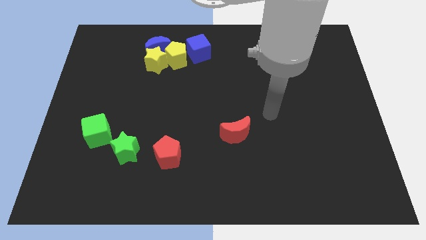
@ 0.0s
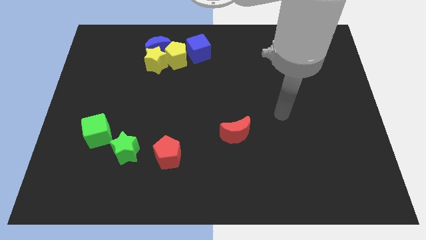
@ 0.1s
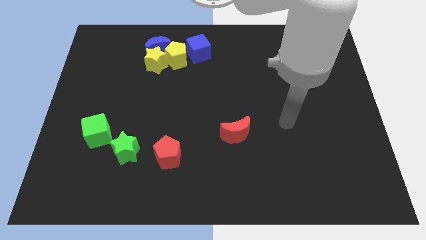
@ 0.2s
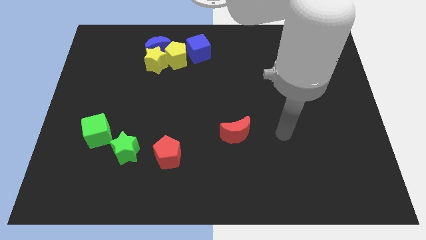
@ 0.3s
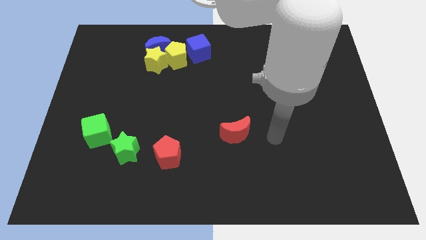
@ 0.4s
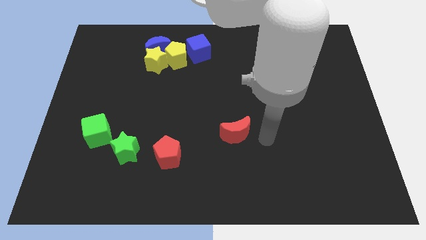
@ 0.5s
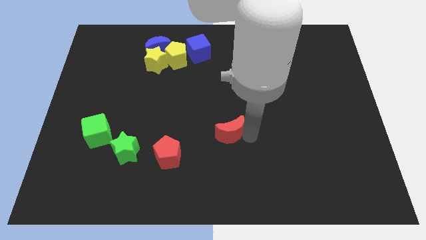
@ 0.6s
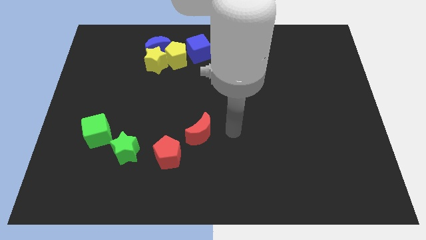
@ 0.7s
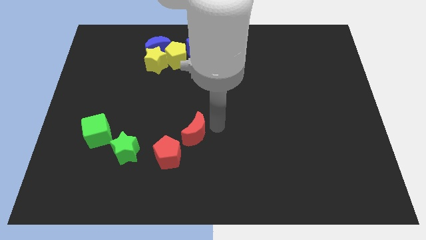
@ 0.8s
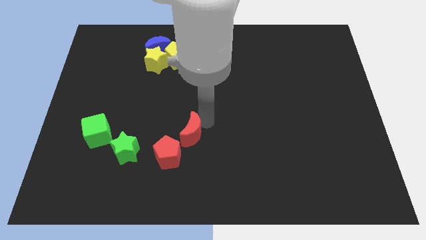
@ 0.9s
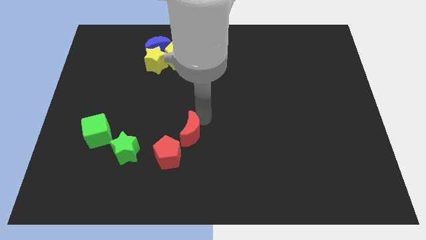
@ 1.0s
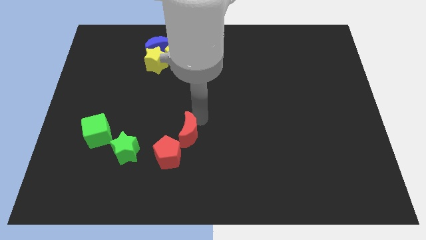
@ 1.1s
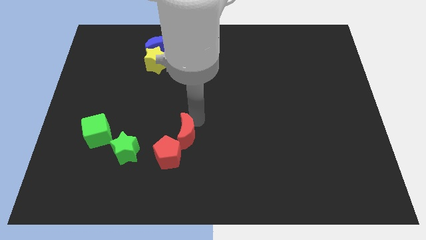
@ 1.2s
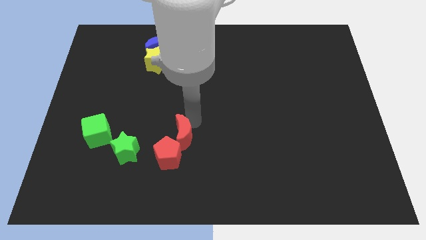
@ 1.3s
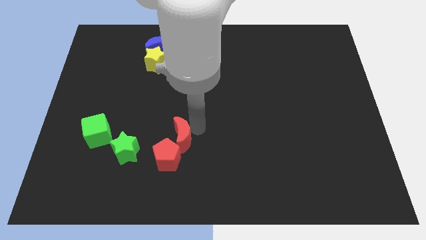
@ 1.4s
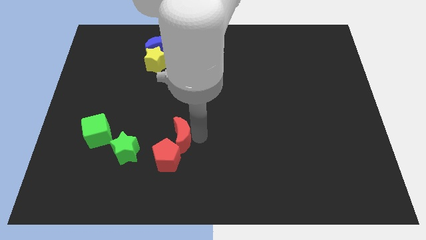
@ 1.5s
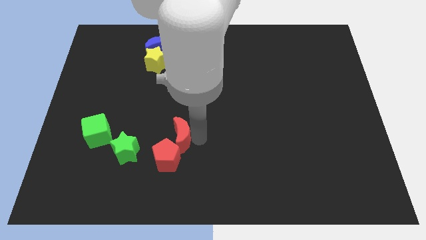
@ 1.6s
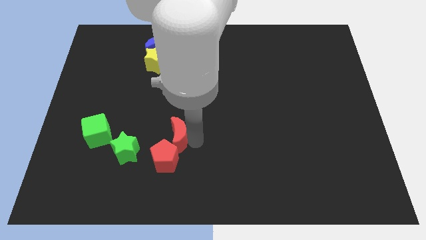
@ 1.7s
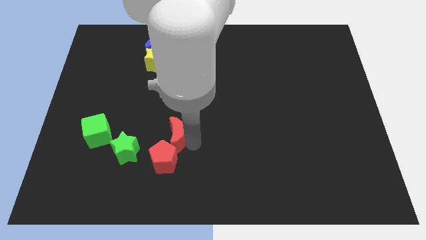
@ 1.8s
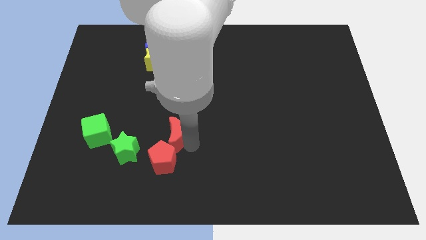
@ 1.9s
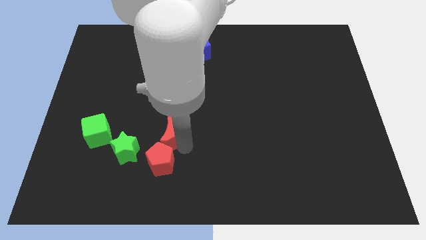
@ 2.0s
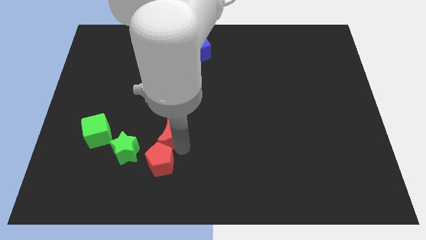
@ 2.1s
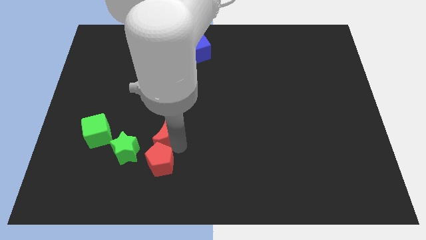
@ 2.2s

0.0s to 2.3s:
place the red moon above the red pentagon

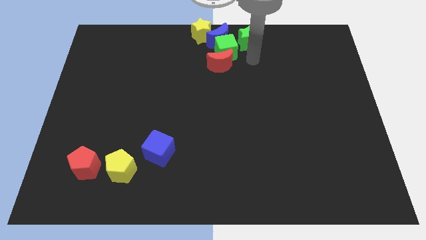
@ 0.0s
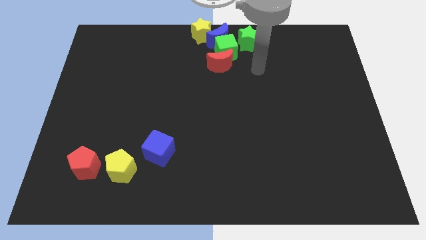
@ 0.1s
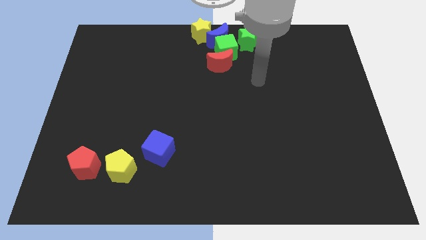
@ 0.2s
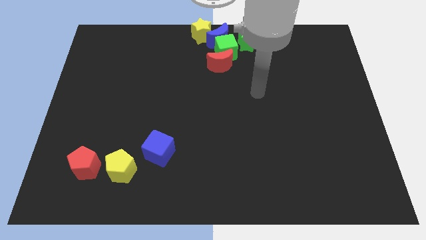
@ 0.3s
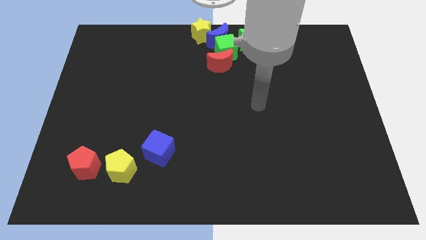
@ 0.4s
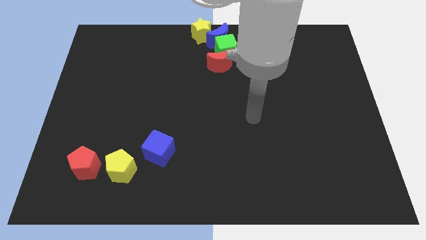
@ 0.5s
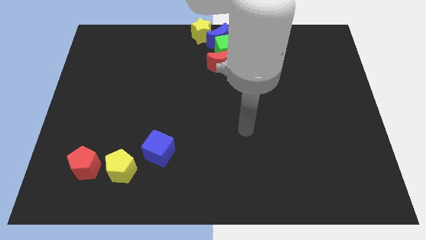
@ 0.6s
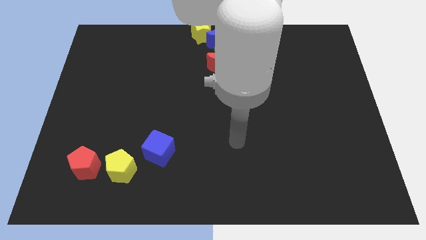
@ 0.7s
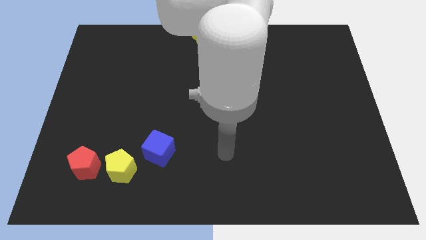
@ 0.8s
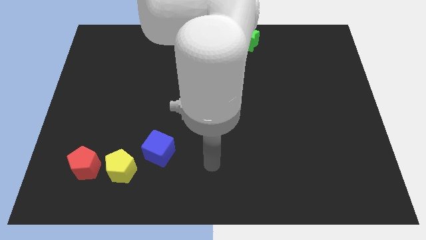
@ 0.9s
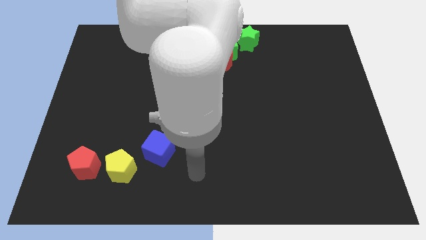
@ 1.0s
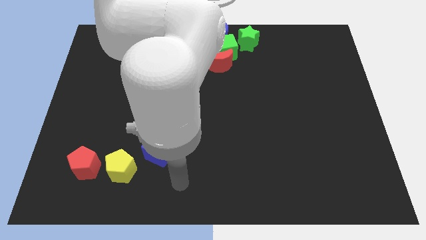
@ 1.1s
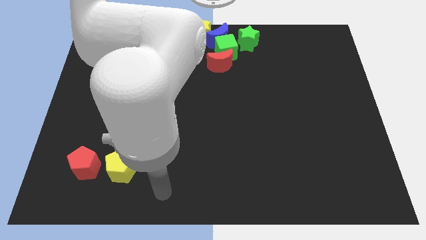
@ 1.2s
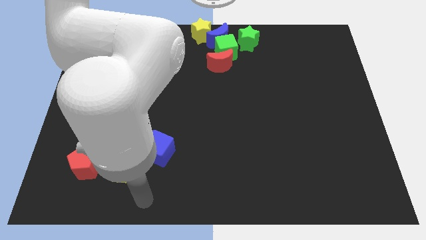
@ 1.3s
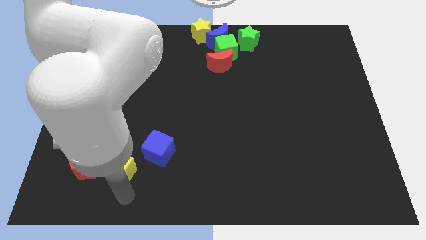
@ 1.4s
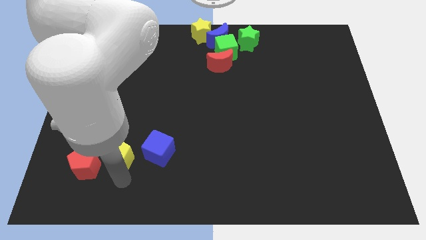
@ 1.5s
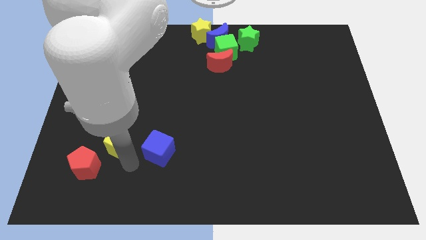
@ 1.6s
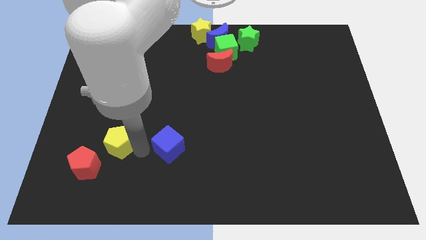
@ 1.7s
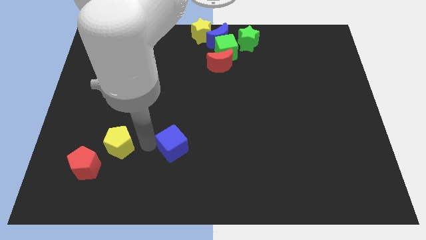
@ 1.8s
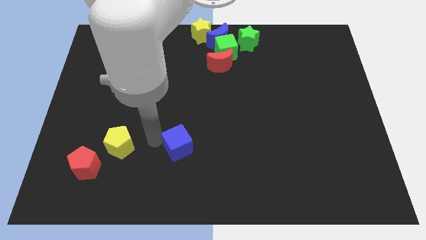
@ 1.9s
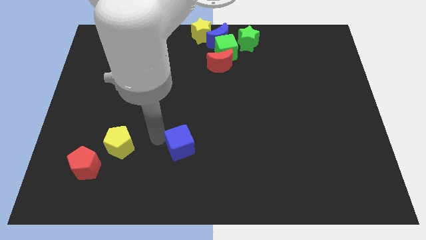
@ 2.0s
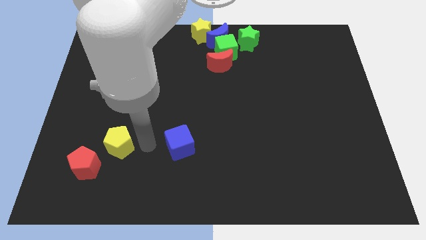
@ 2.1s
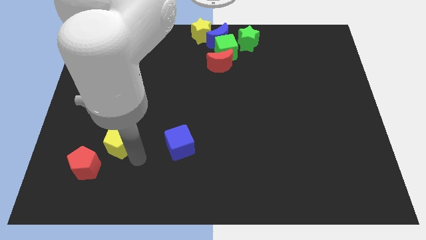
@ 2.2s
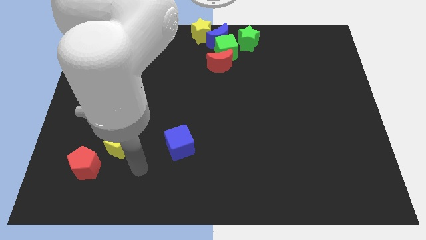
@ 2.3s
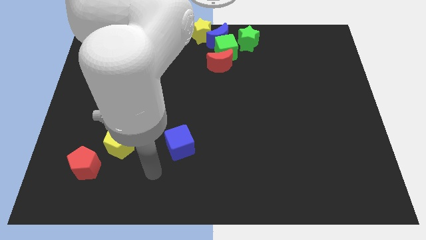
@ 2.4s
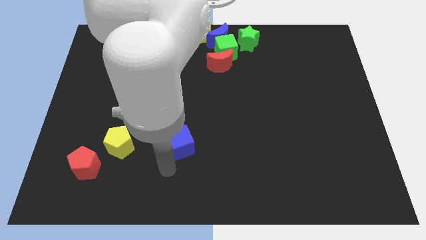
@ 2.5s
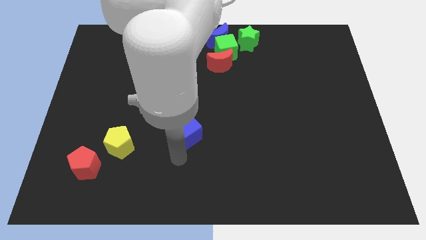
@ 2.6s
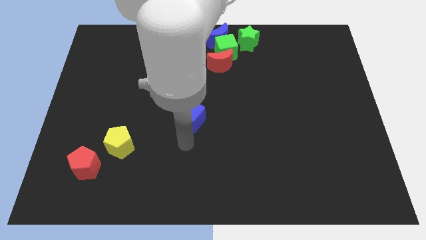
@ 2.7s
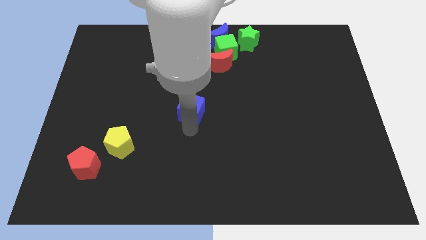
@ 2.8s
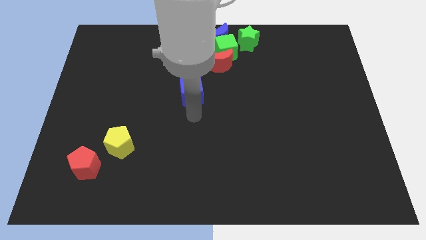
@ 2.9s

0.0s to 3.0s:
move the blue cube diagonal to the yellow pentagon

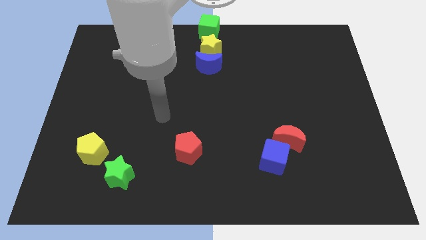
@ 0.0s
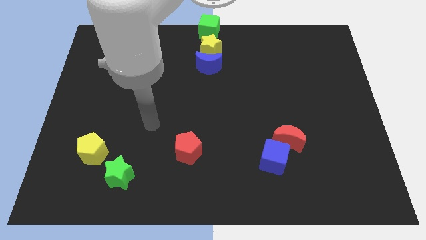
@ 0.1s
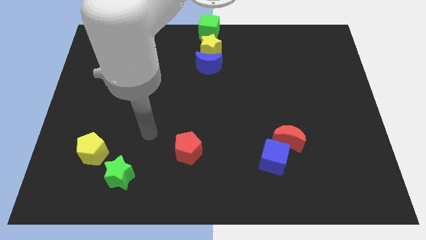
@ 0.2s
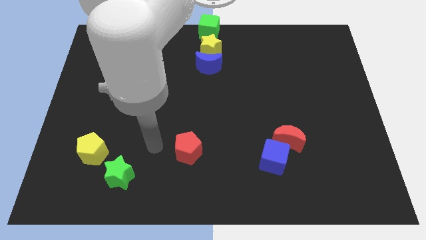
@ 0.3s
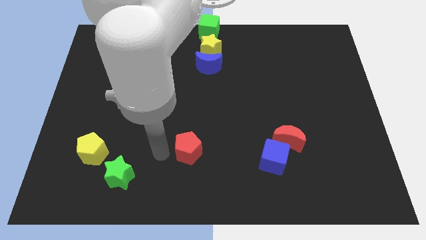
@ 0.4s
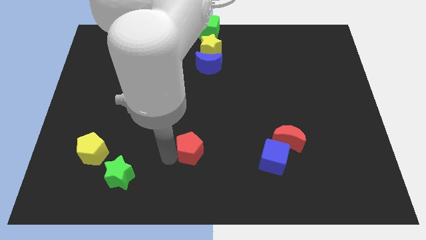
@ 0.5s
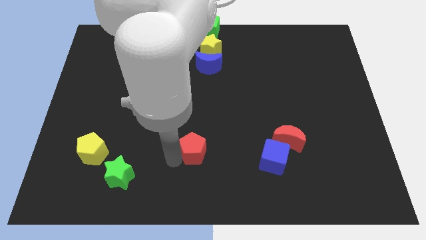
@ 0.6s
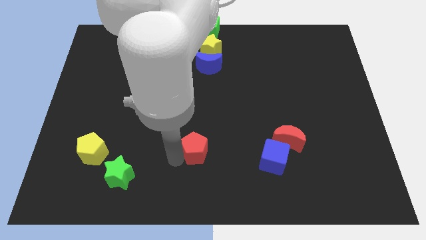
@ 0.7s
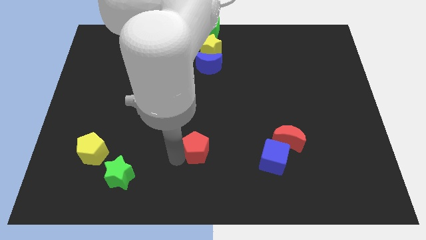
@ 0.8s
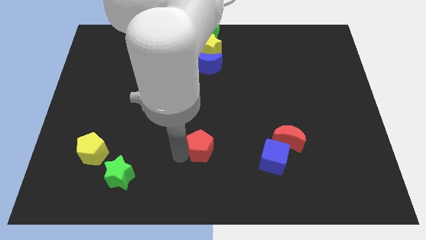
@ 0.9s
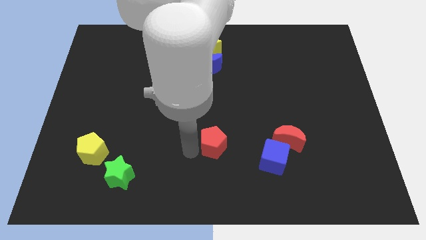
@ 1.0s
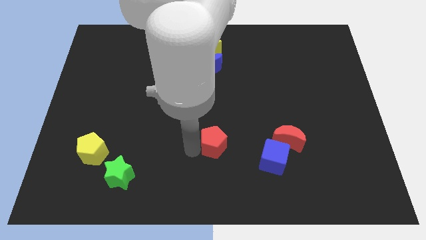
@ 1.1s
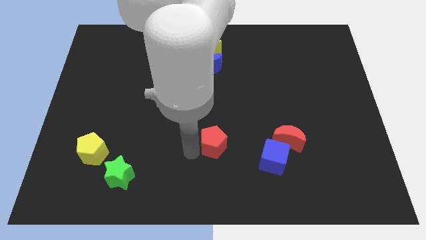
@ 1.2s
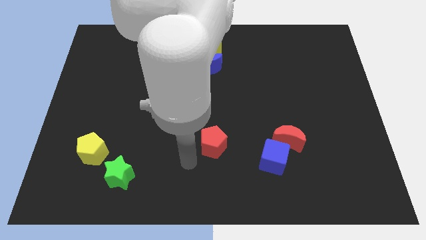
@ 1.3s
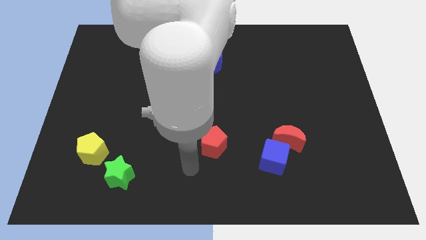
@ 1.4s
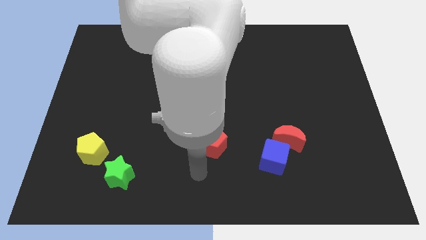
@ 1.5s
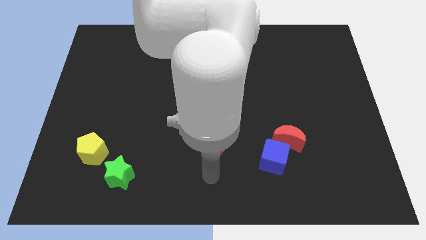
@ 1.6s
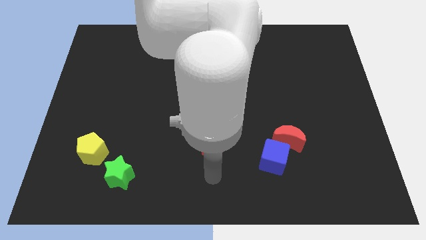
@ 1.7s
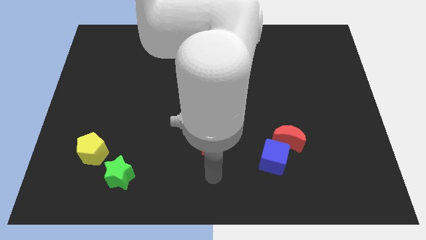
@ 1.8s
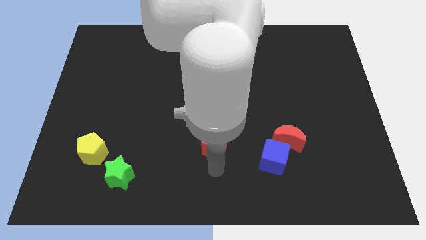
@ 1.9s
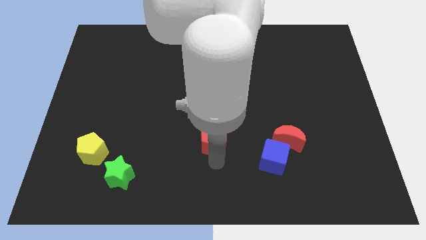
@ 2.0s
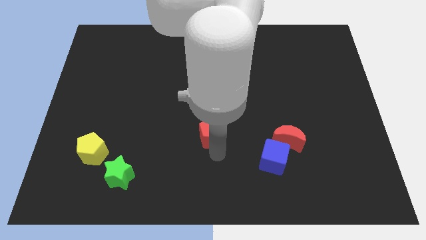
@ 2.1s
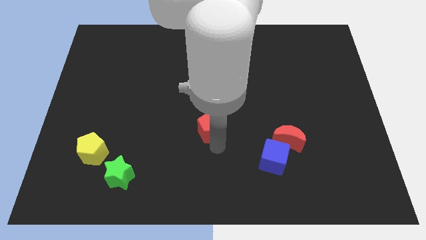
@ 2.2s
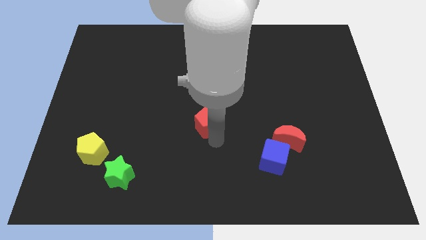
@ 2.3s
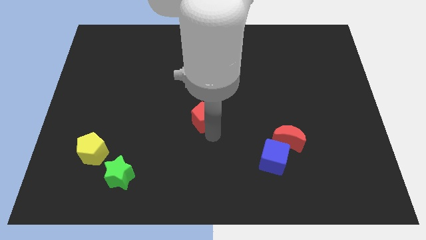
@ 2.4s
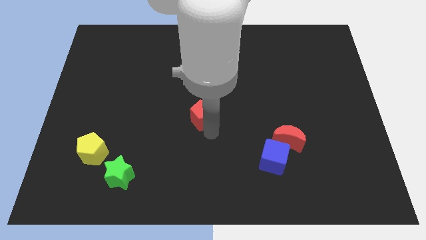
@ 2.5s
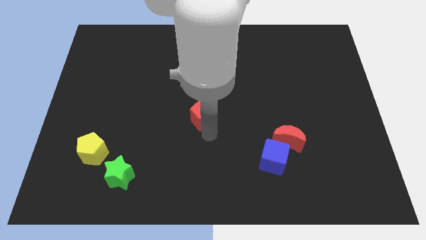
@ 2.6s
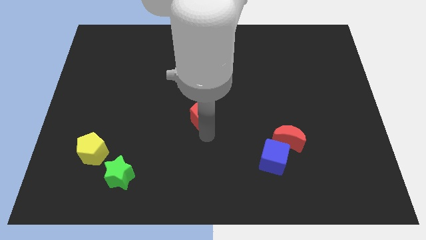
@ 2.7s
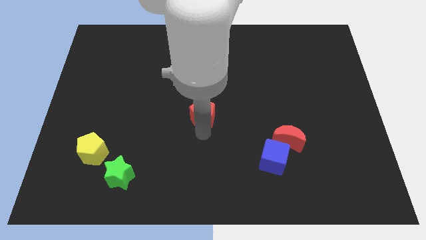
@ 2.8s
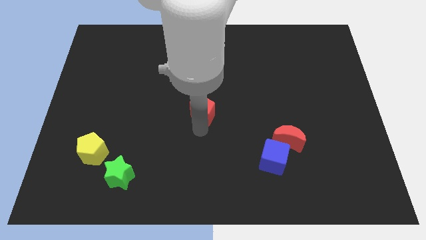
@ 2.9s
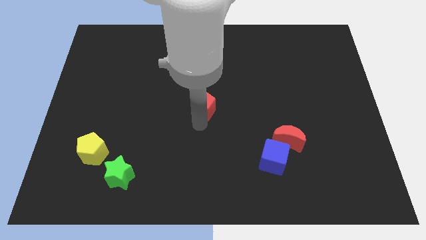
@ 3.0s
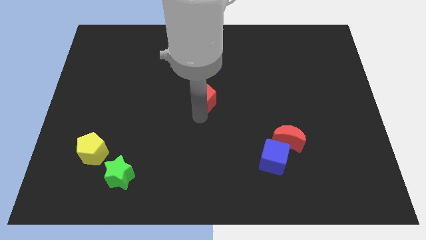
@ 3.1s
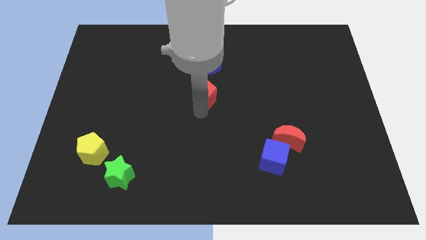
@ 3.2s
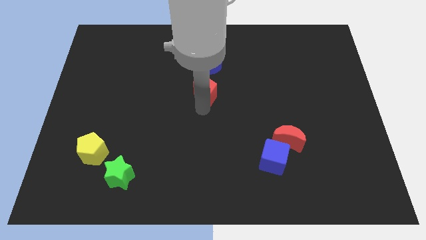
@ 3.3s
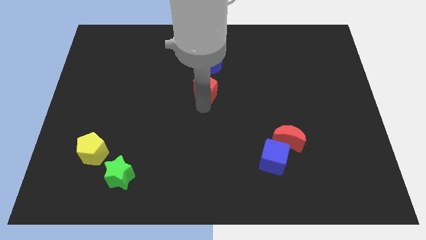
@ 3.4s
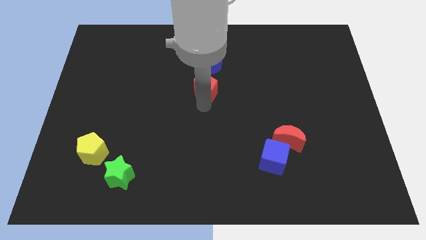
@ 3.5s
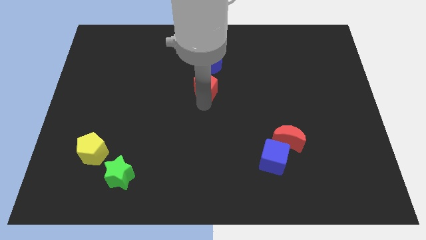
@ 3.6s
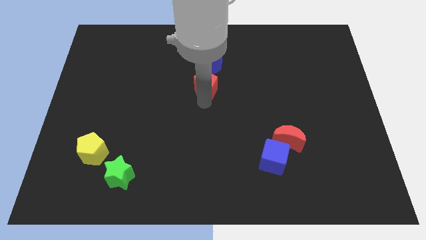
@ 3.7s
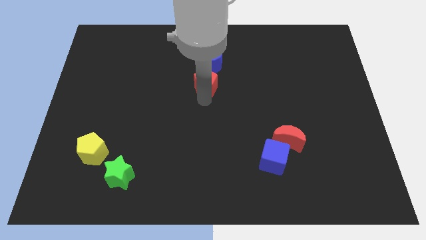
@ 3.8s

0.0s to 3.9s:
place the red pentagon at the bottom of blue moon
